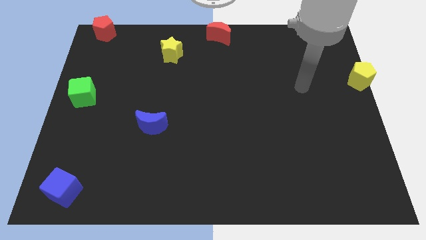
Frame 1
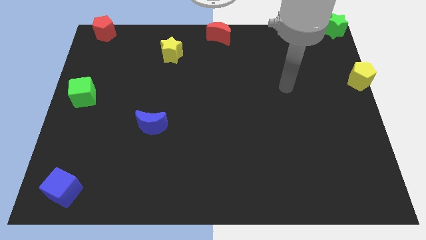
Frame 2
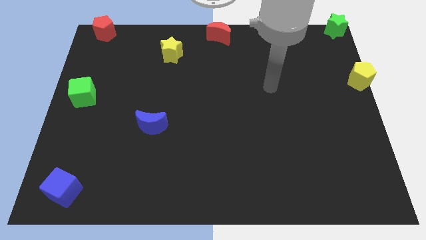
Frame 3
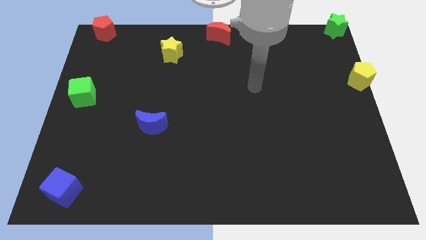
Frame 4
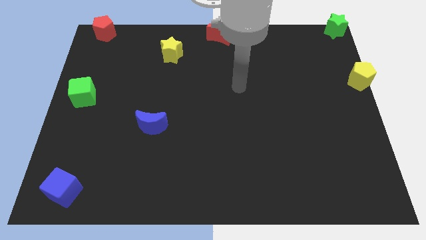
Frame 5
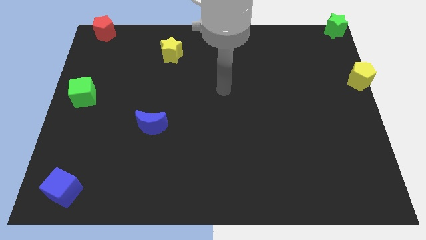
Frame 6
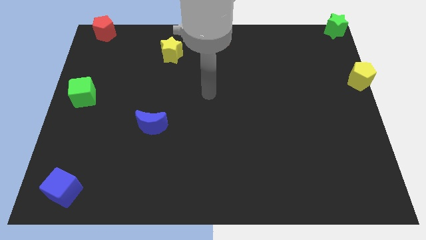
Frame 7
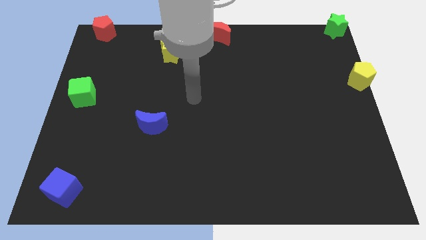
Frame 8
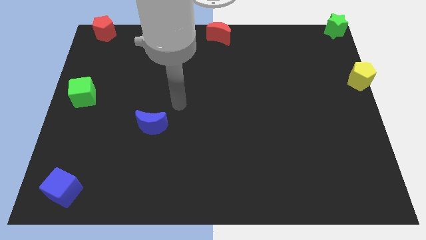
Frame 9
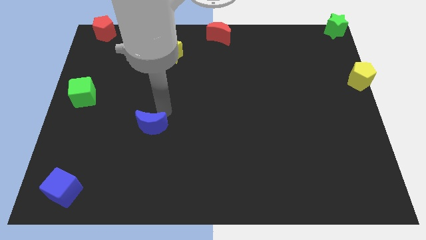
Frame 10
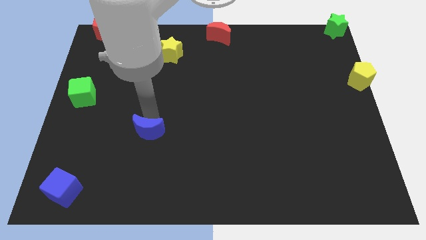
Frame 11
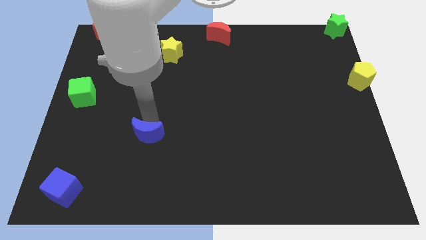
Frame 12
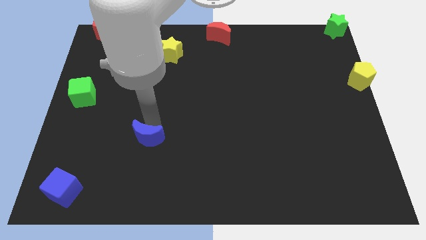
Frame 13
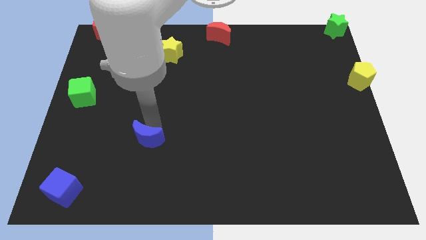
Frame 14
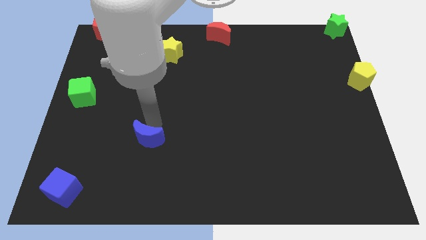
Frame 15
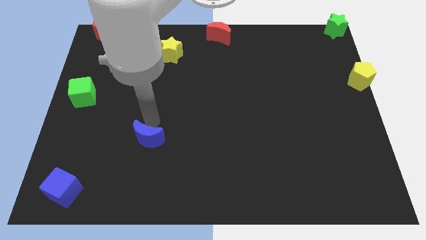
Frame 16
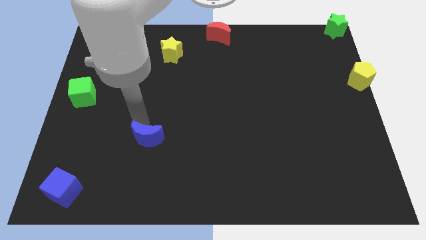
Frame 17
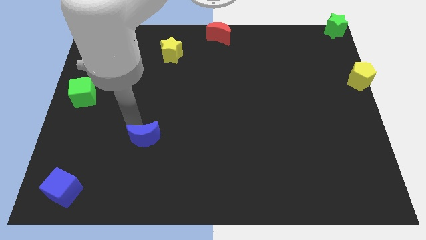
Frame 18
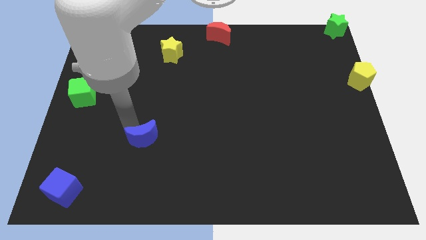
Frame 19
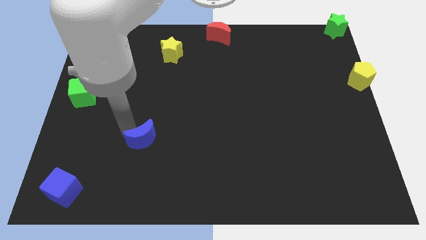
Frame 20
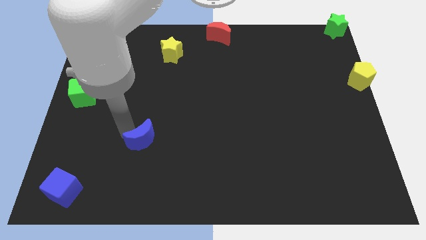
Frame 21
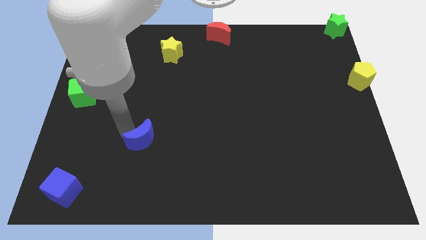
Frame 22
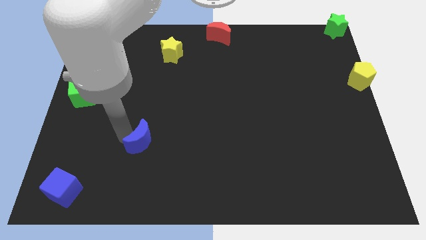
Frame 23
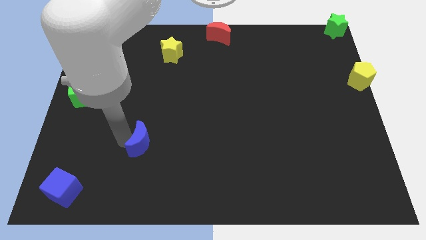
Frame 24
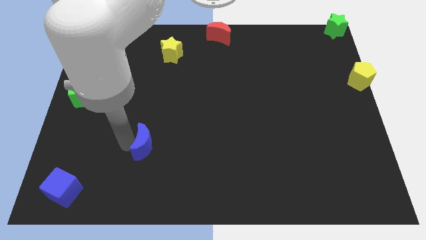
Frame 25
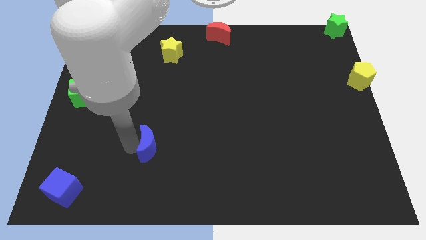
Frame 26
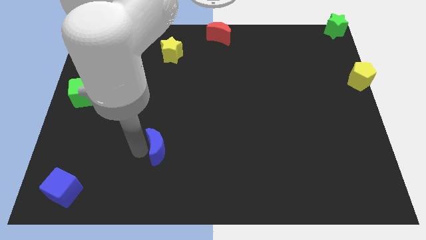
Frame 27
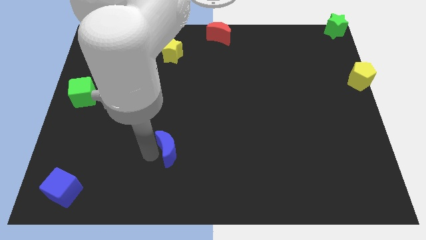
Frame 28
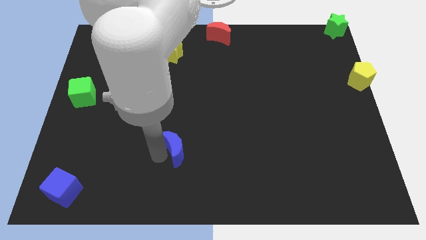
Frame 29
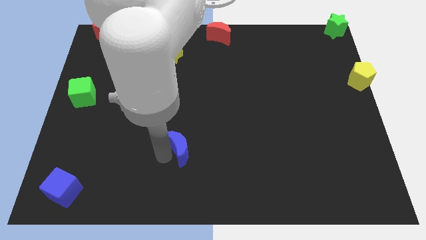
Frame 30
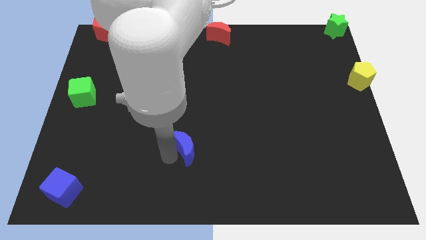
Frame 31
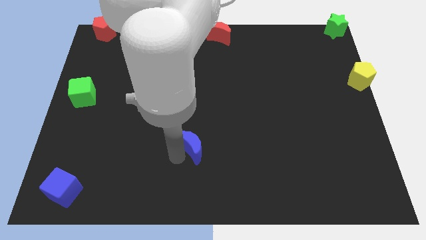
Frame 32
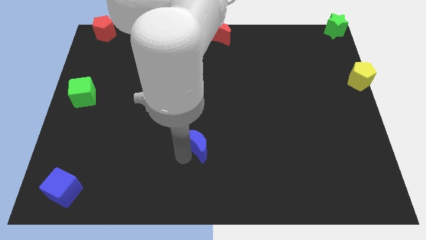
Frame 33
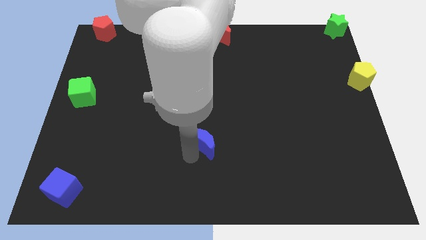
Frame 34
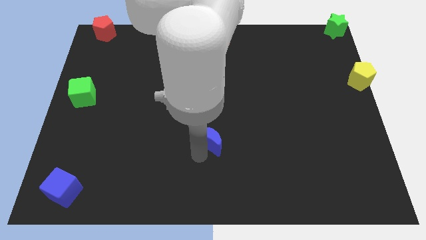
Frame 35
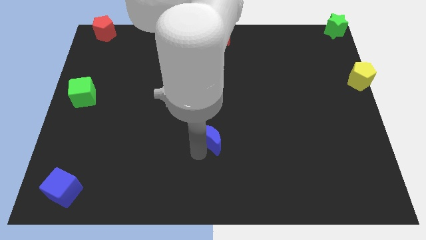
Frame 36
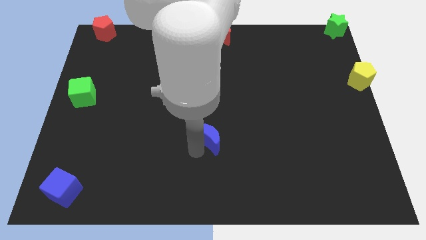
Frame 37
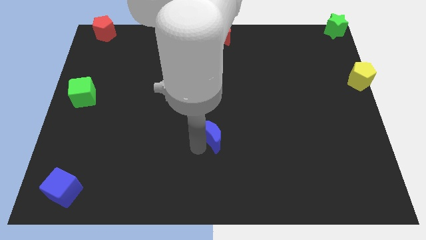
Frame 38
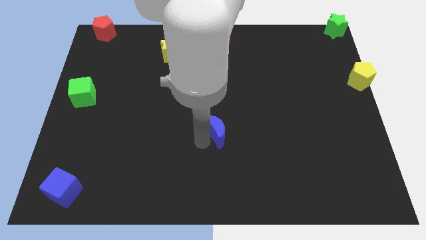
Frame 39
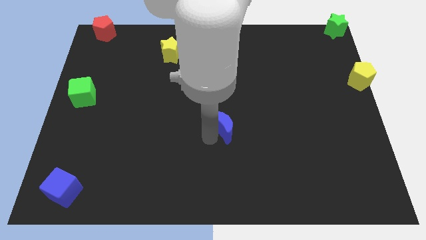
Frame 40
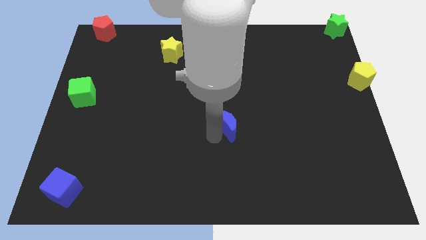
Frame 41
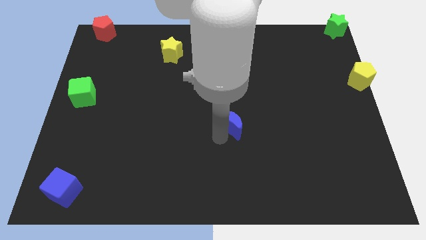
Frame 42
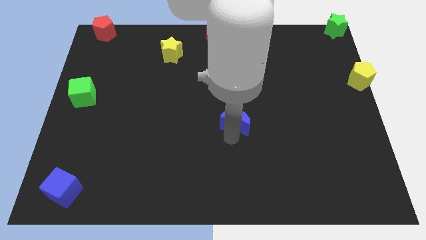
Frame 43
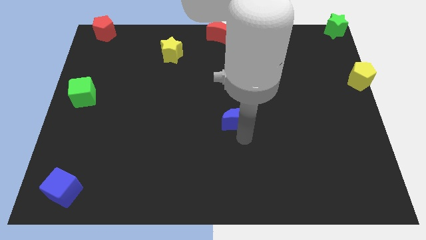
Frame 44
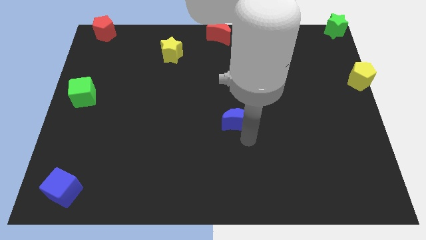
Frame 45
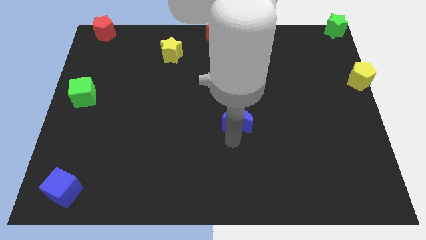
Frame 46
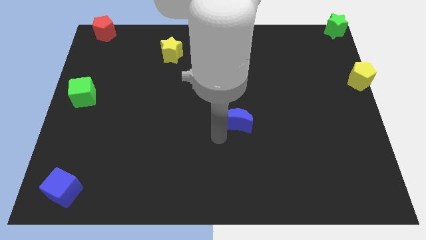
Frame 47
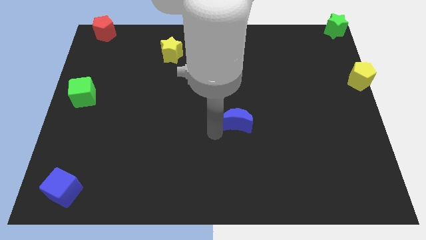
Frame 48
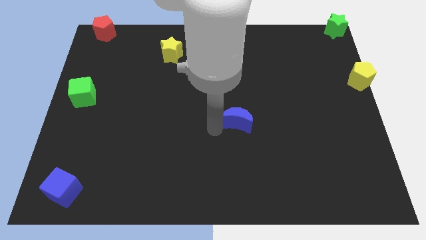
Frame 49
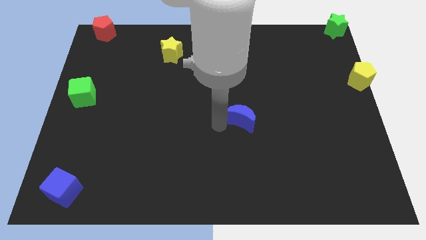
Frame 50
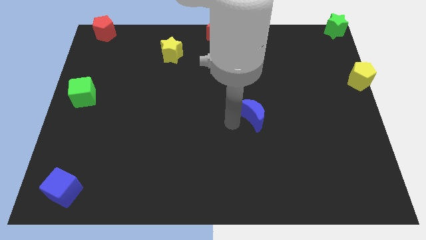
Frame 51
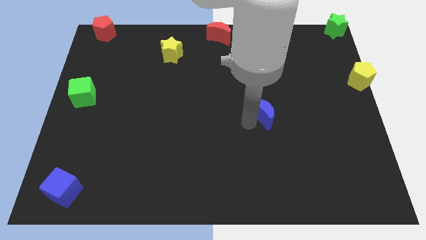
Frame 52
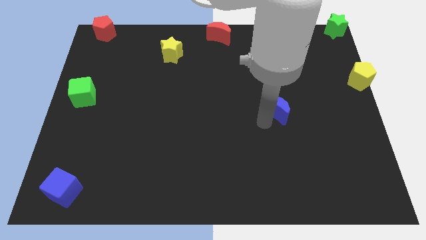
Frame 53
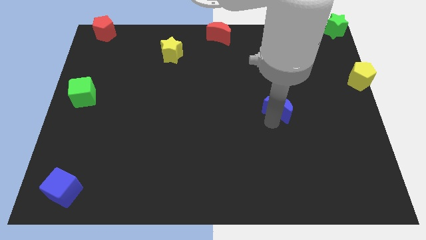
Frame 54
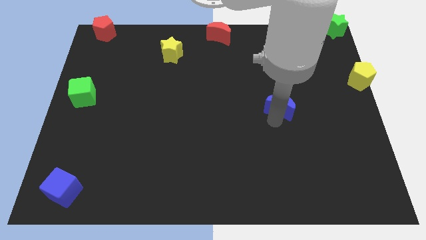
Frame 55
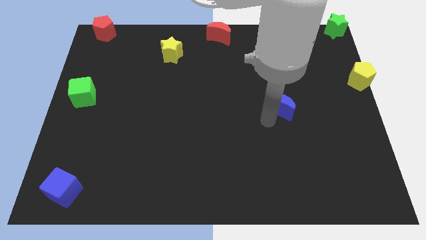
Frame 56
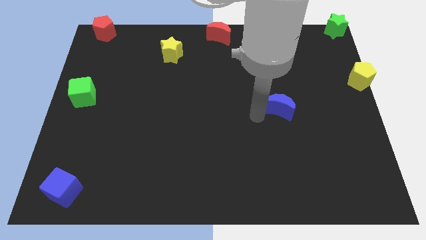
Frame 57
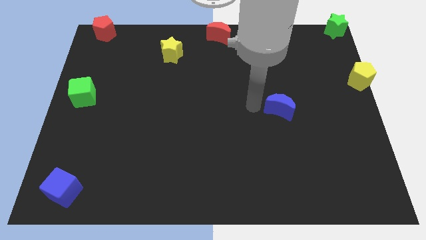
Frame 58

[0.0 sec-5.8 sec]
slide the blue moon diagonally bottom right to the red moon

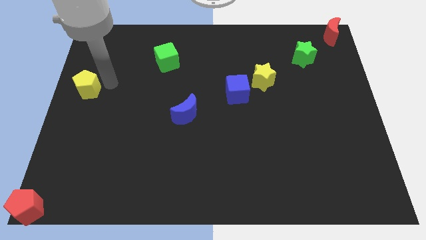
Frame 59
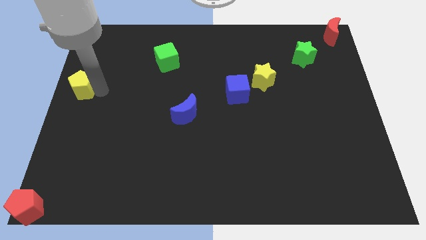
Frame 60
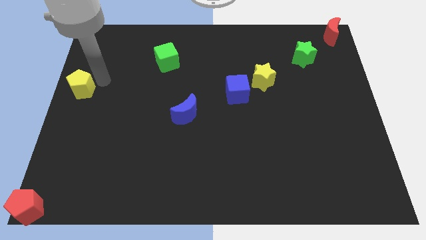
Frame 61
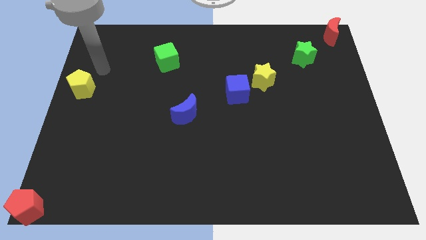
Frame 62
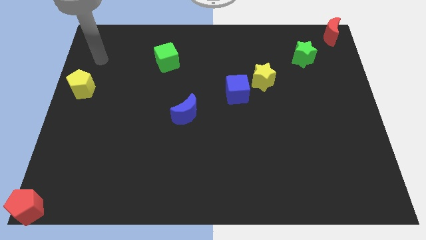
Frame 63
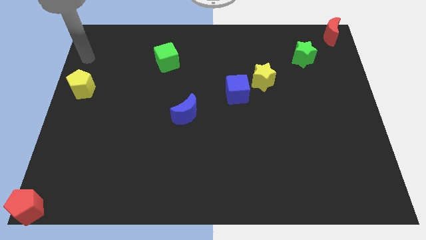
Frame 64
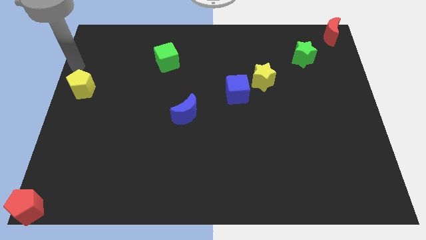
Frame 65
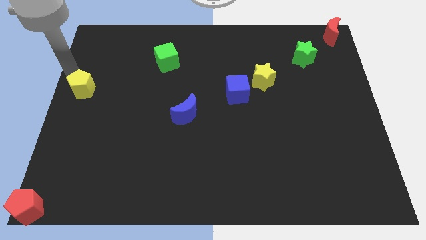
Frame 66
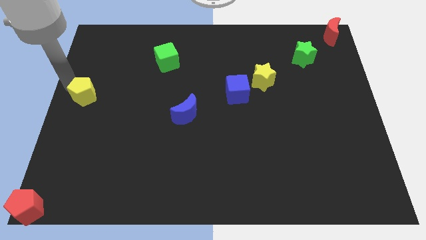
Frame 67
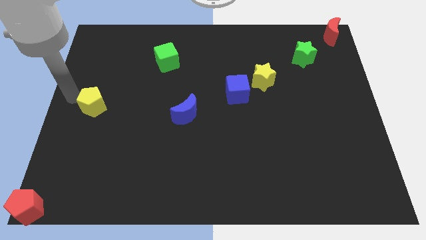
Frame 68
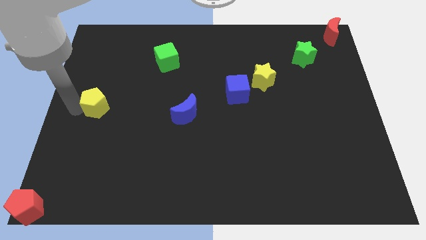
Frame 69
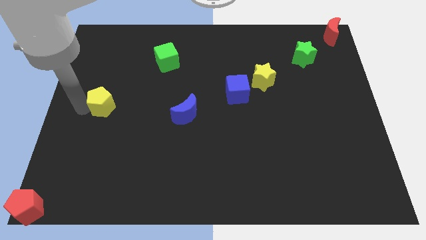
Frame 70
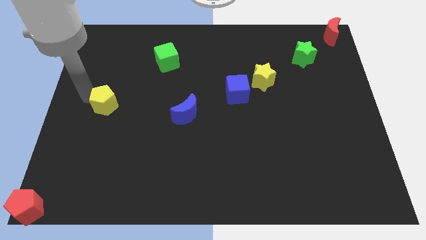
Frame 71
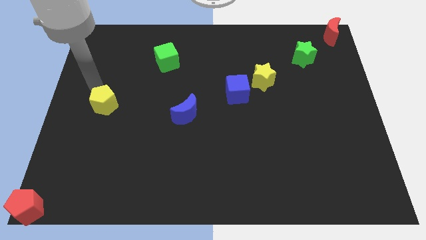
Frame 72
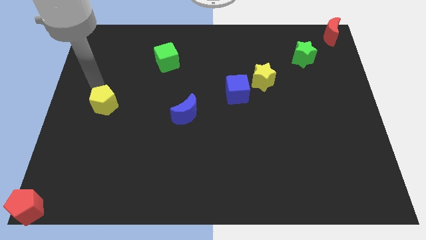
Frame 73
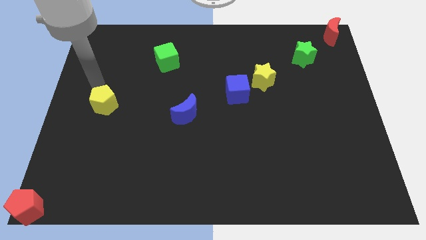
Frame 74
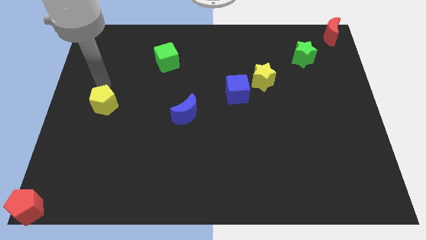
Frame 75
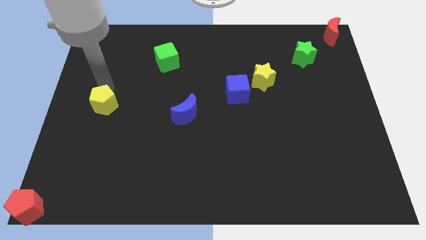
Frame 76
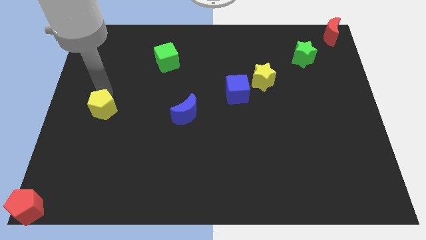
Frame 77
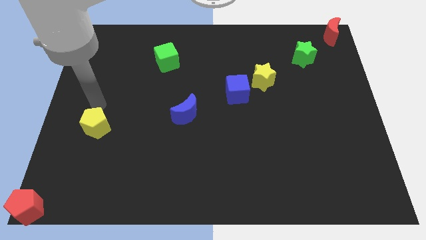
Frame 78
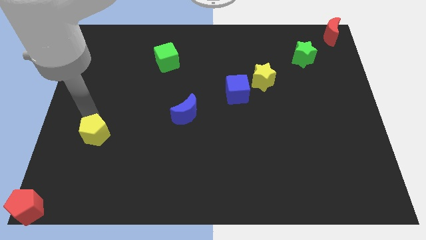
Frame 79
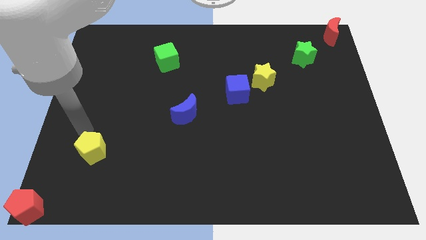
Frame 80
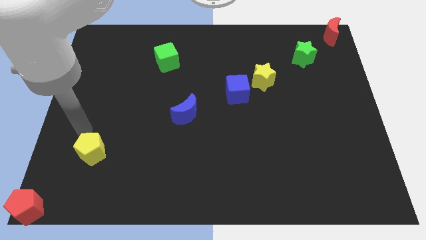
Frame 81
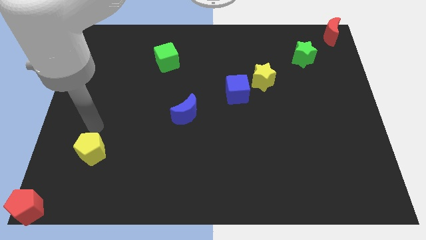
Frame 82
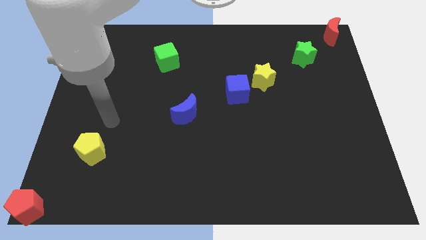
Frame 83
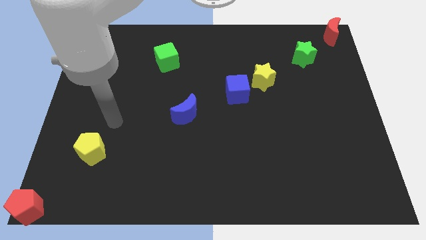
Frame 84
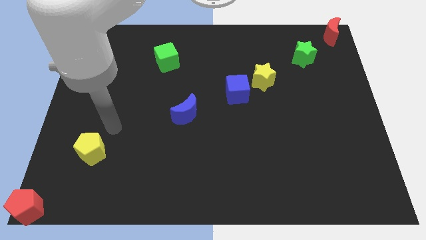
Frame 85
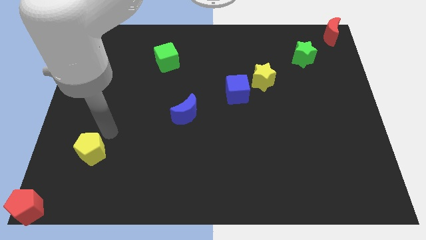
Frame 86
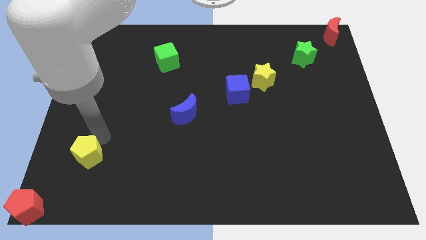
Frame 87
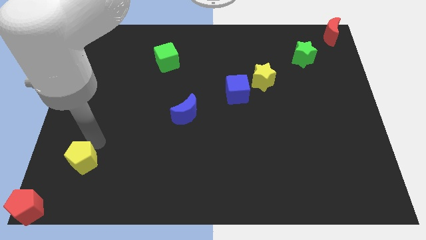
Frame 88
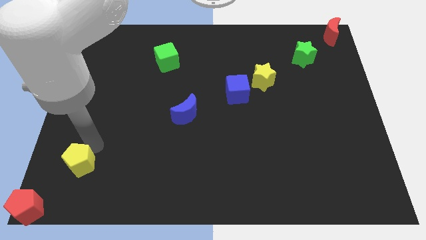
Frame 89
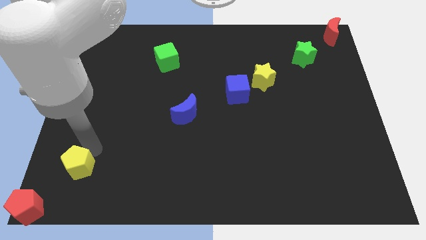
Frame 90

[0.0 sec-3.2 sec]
move the yellow pentagon towards bottom left
